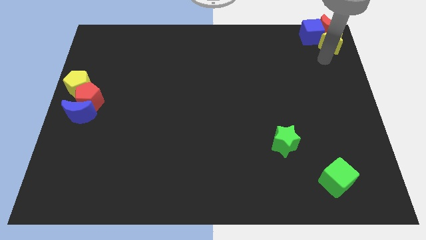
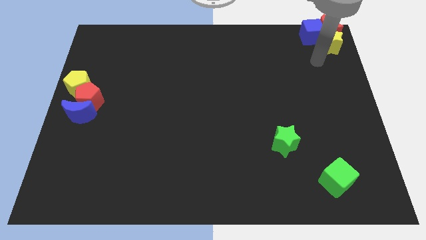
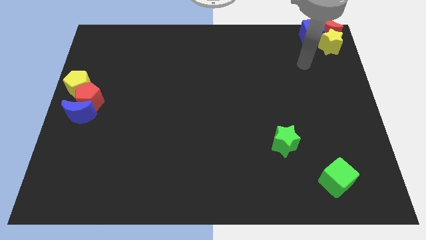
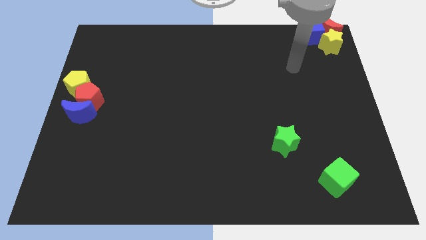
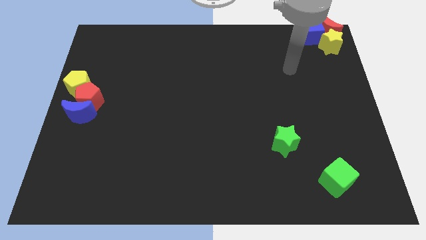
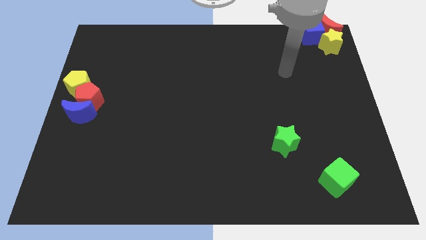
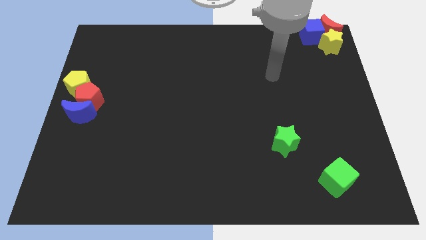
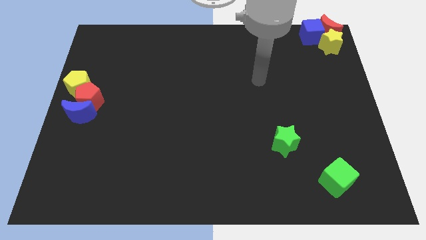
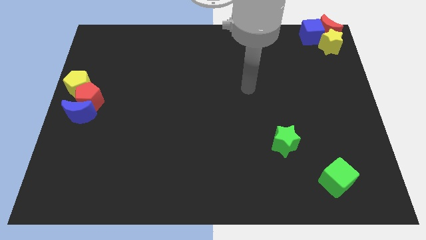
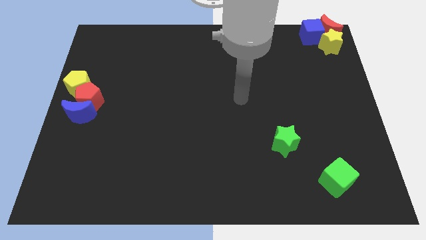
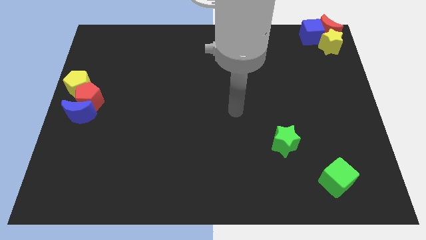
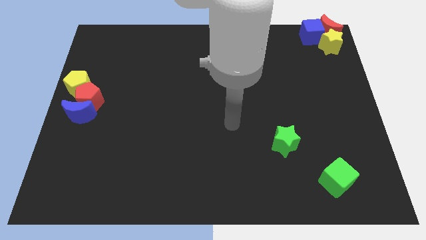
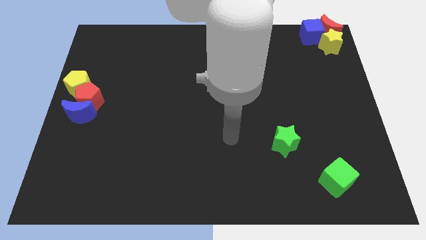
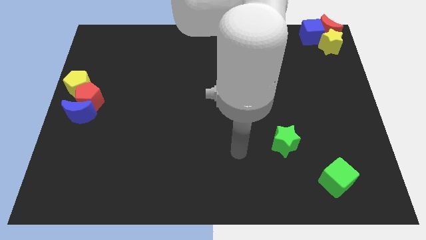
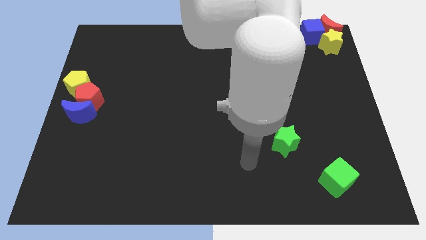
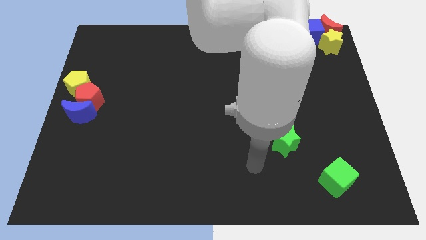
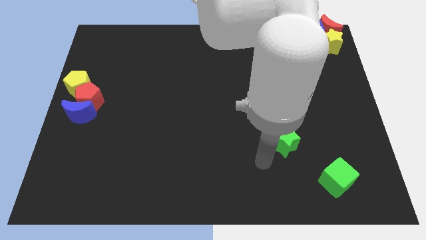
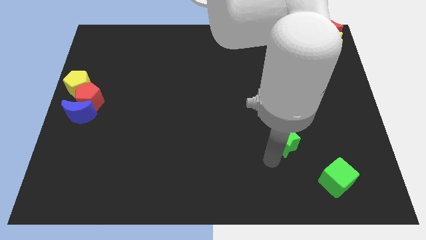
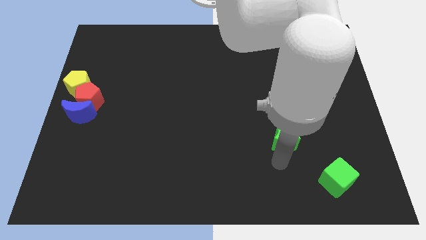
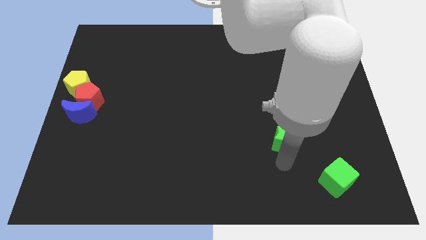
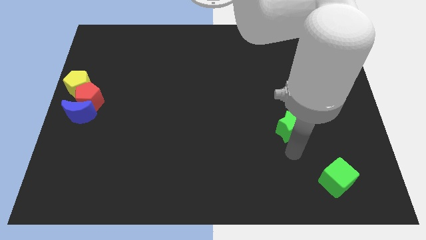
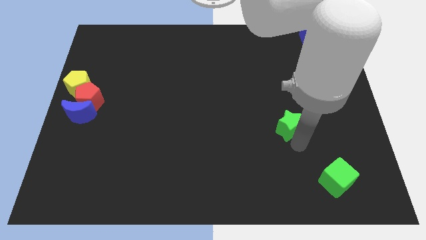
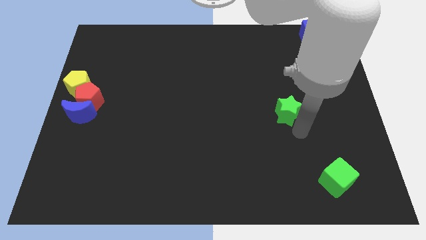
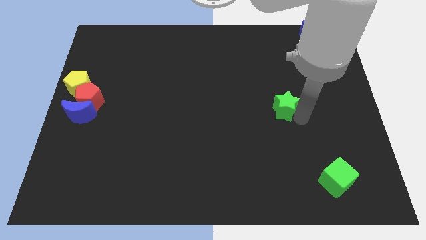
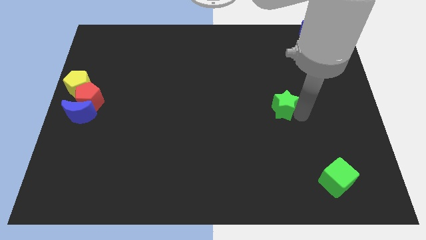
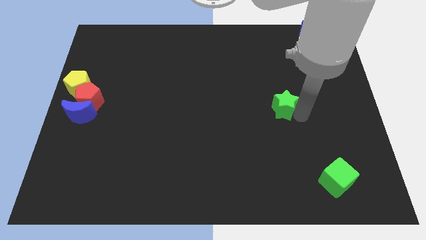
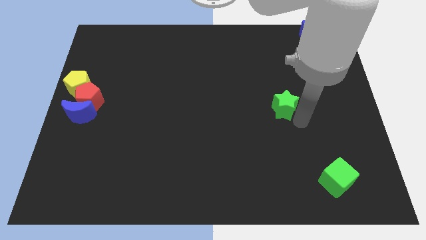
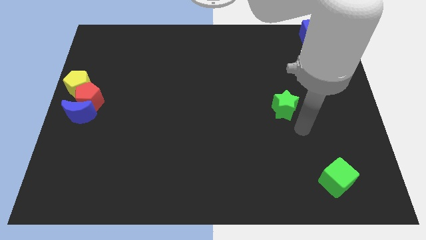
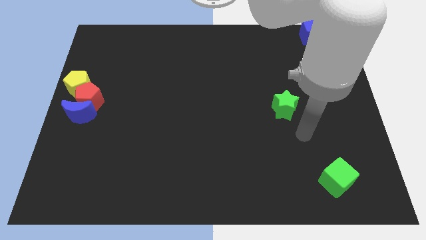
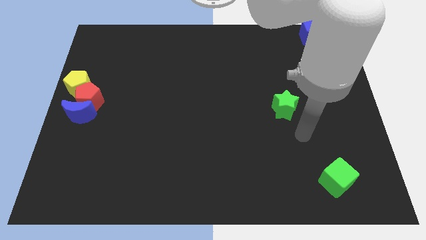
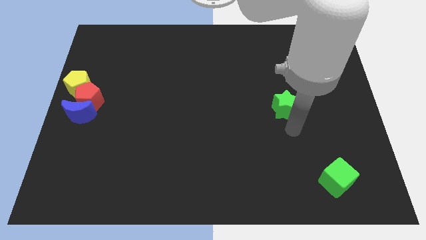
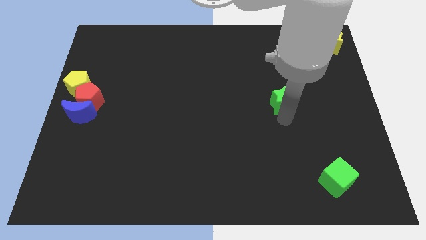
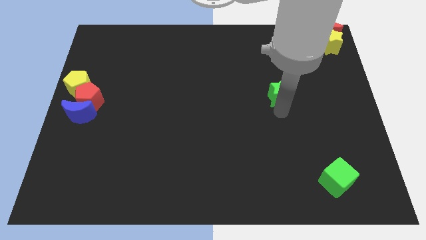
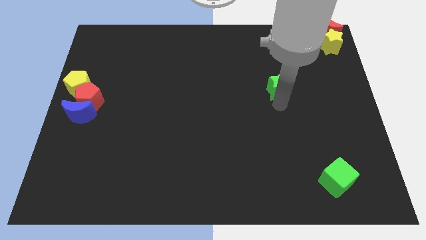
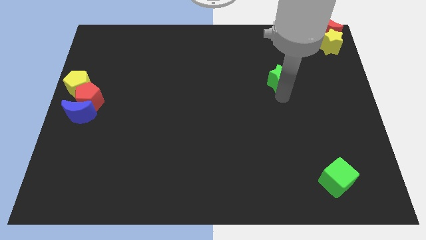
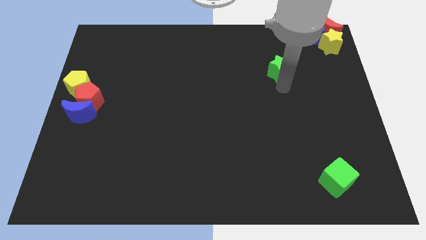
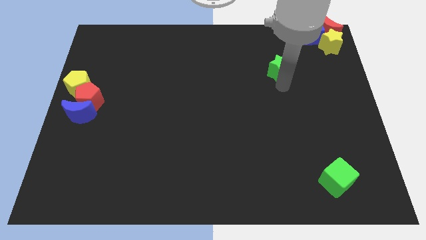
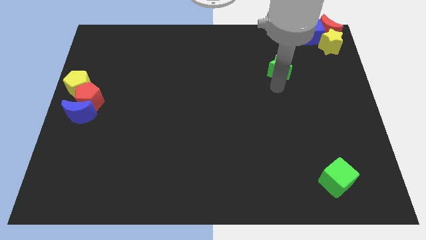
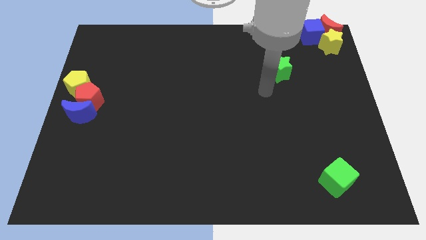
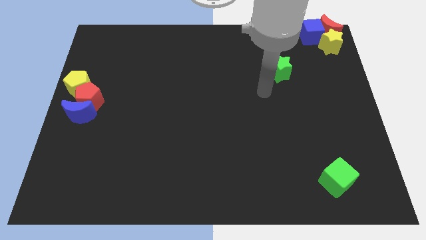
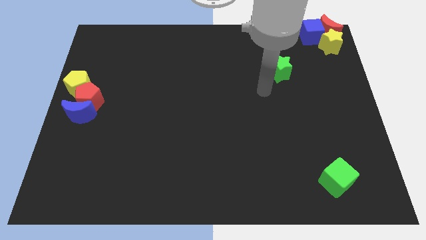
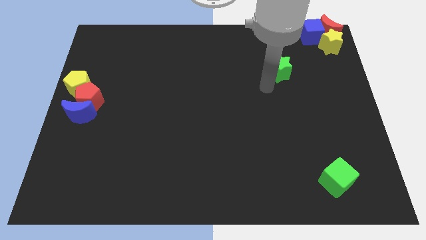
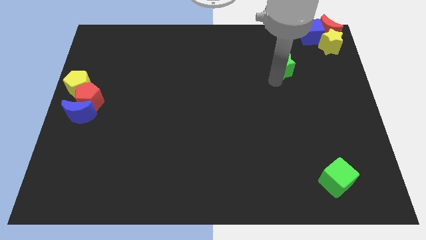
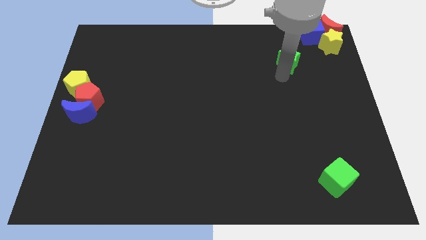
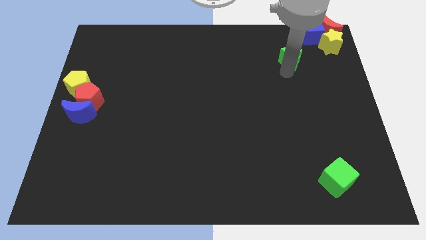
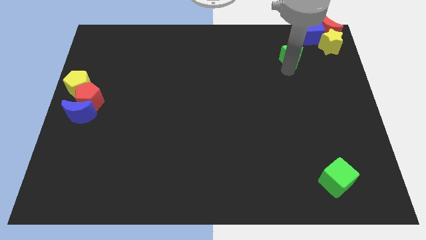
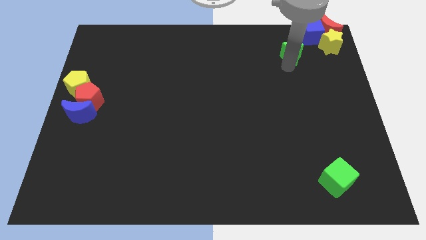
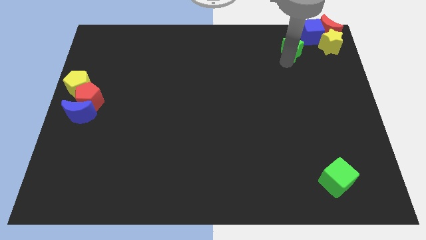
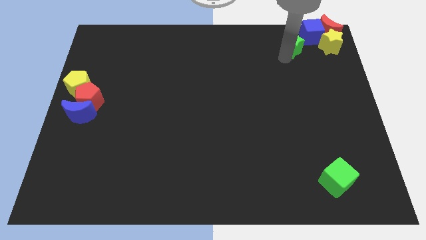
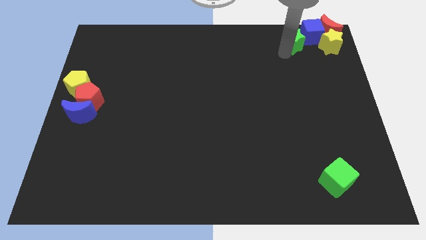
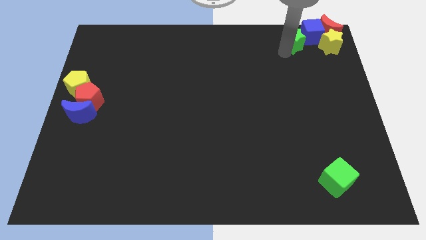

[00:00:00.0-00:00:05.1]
slide the green star towards the top right

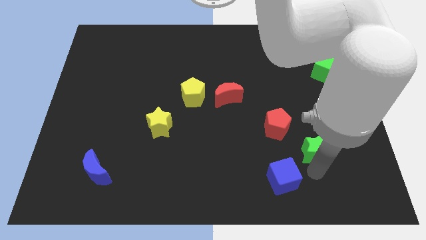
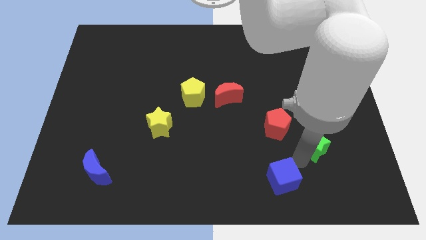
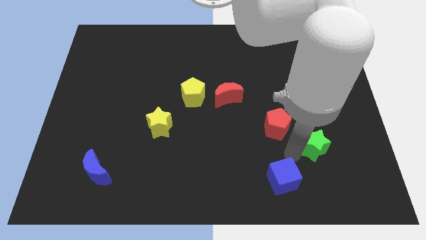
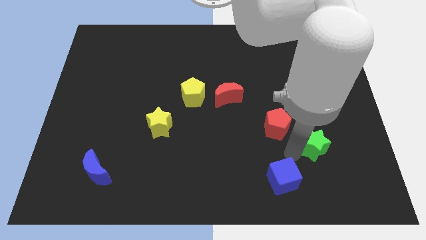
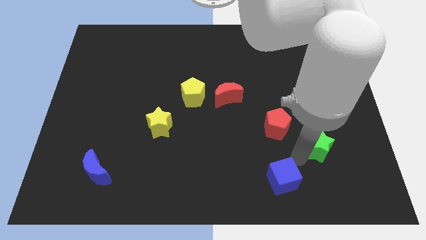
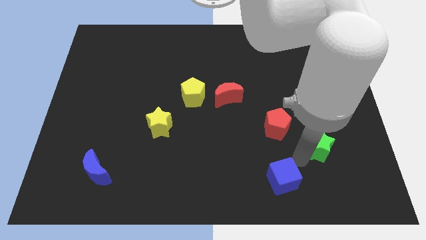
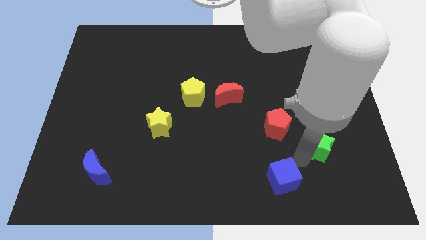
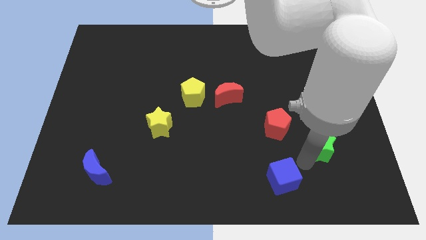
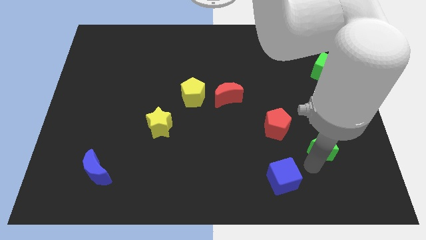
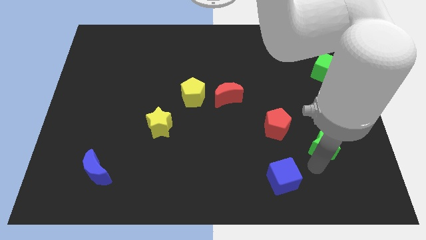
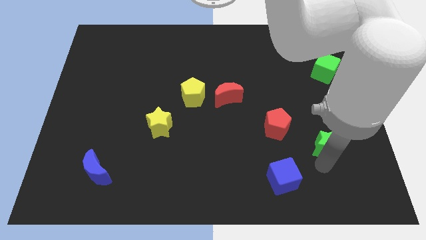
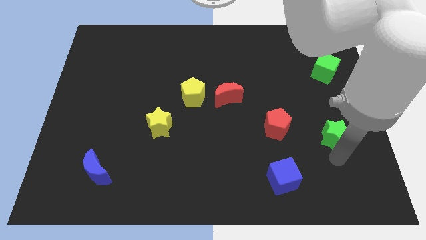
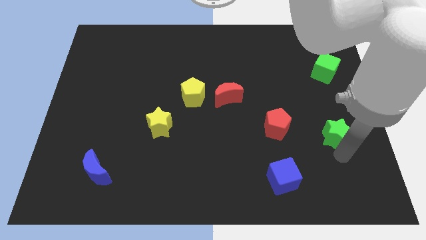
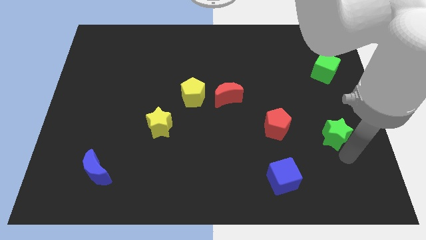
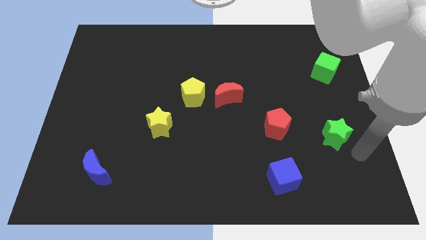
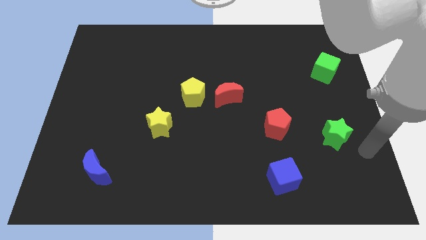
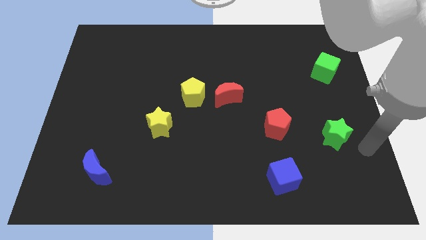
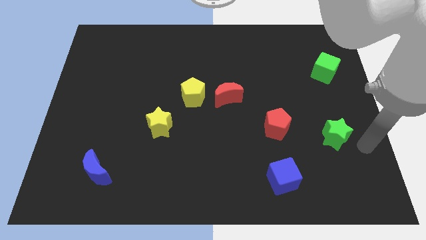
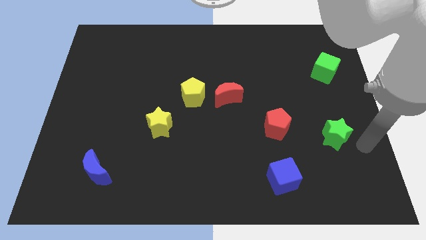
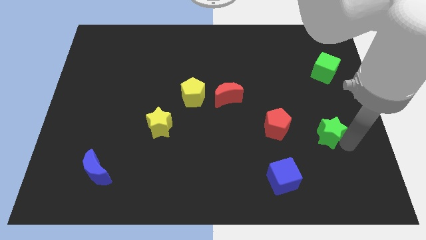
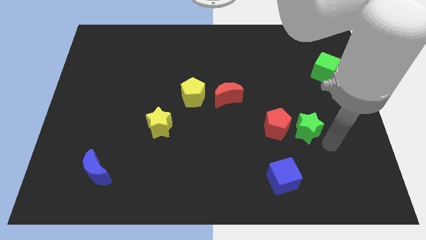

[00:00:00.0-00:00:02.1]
push the green star to the right side of the red pentagon

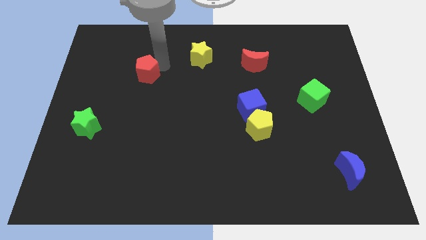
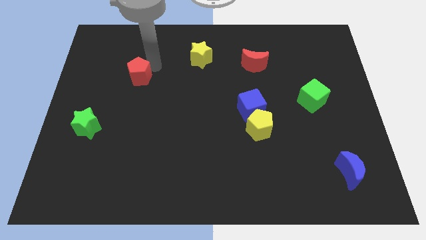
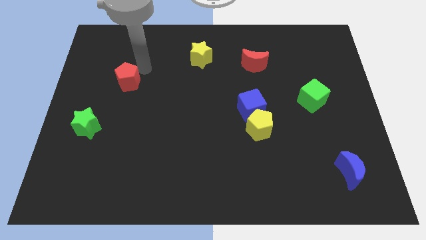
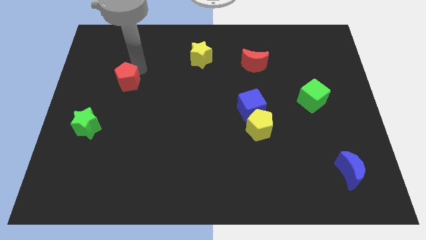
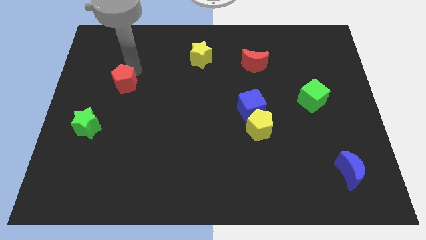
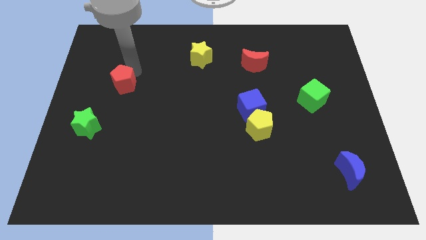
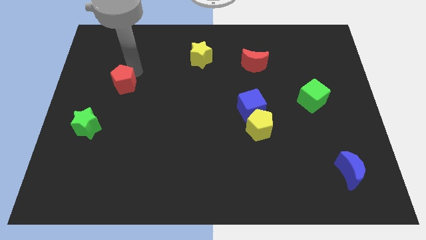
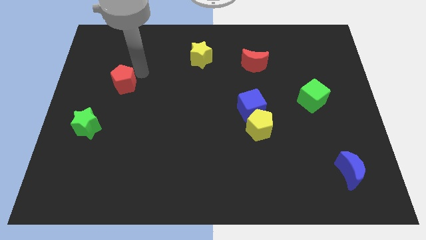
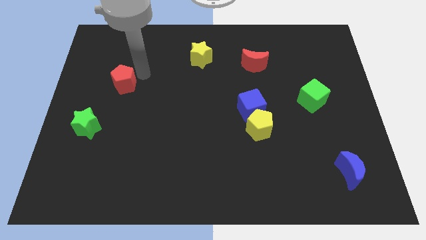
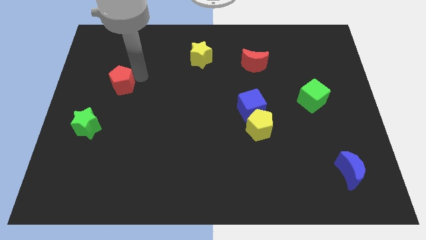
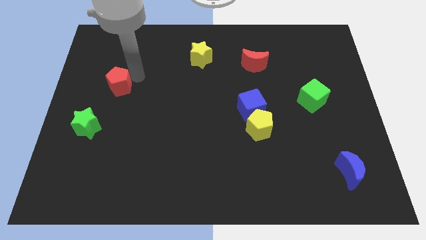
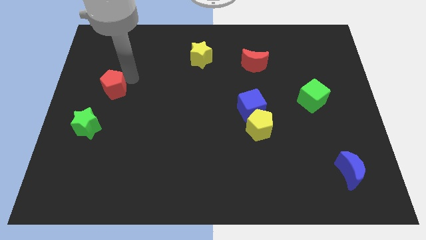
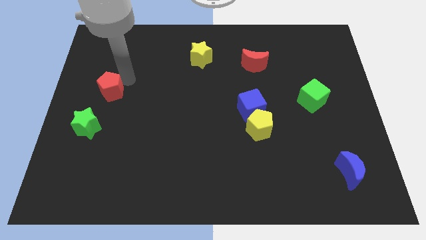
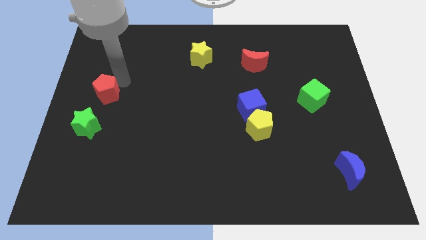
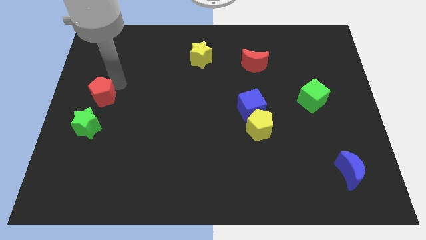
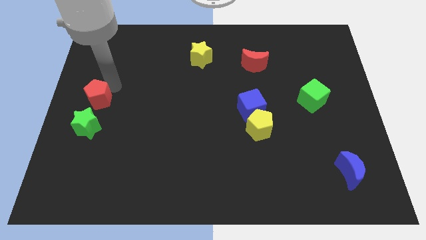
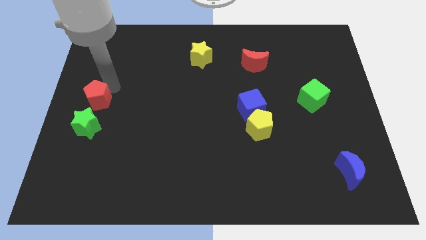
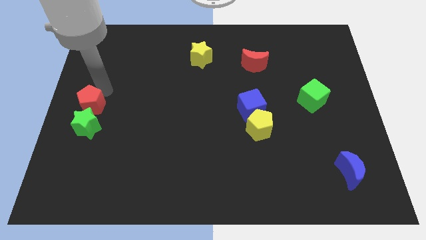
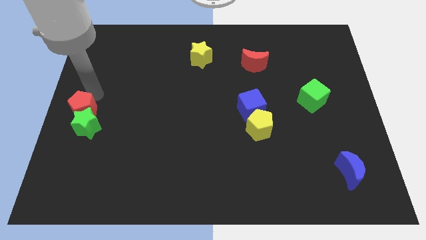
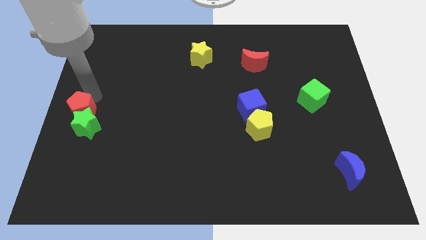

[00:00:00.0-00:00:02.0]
put the red pentagon above the green star
